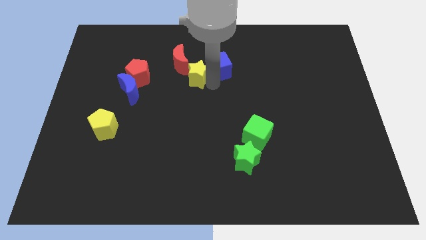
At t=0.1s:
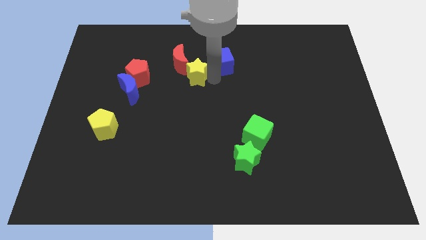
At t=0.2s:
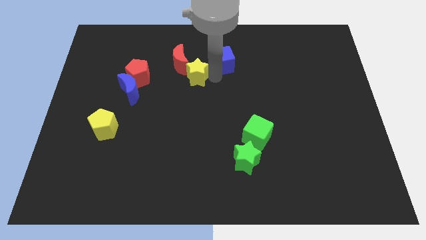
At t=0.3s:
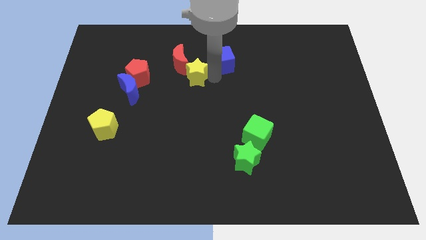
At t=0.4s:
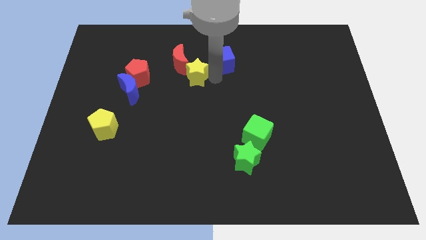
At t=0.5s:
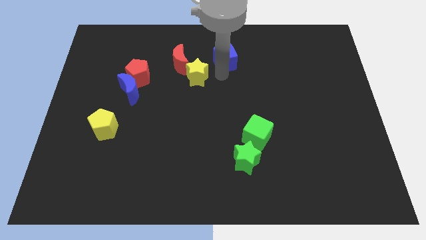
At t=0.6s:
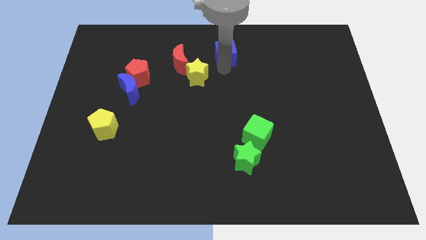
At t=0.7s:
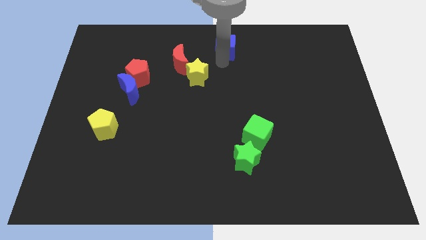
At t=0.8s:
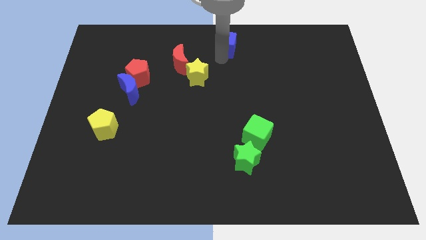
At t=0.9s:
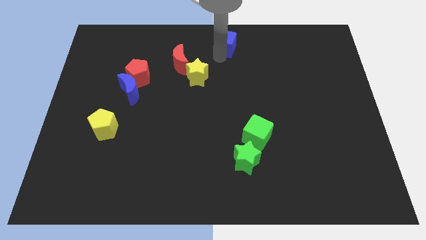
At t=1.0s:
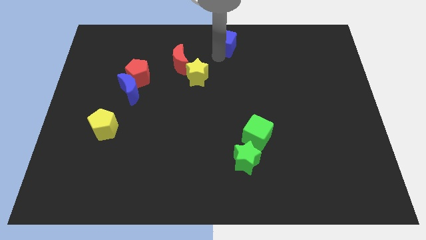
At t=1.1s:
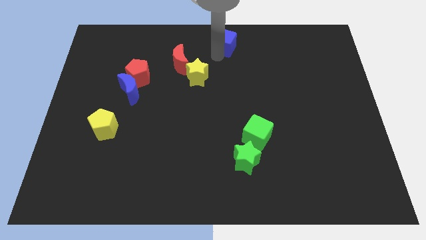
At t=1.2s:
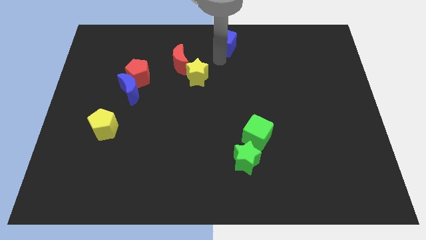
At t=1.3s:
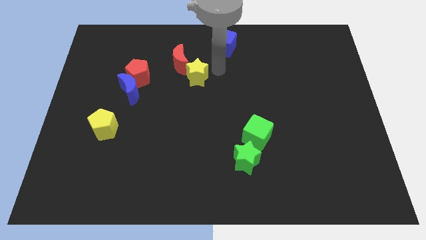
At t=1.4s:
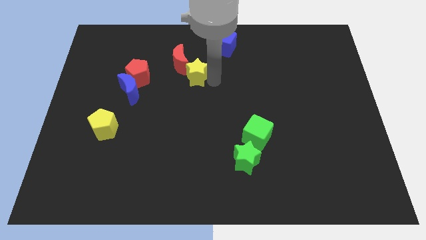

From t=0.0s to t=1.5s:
move the blue cube to the top center of board

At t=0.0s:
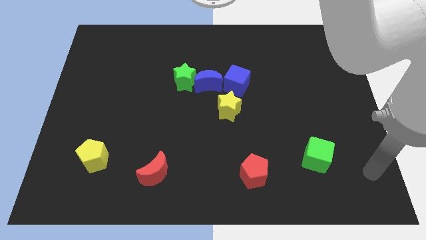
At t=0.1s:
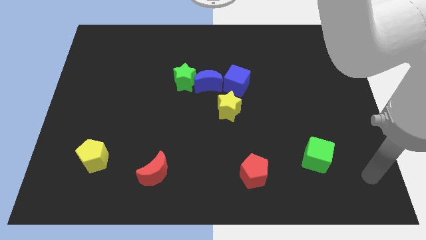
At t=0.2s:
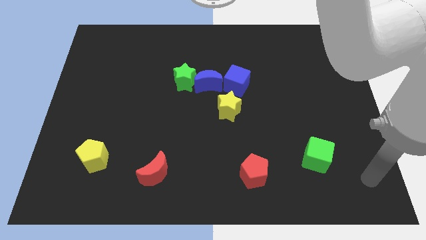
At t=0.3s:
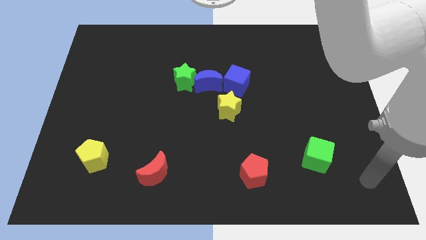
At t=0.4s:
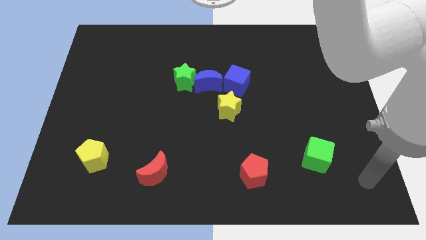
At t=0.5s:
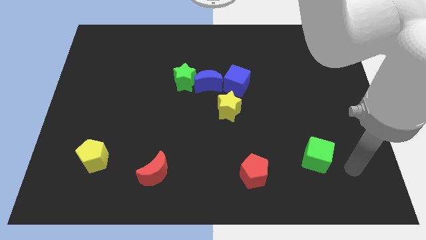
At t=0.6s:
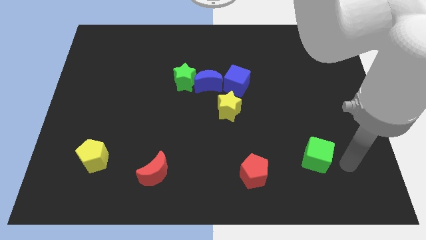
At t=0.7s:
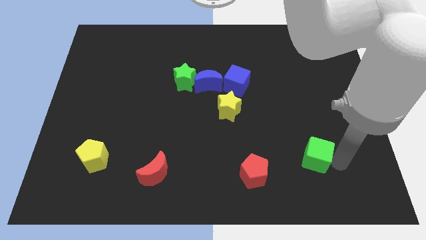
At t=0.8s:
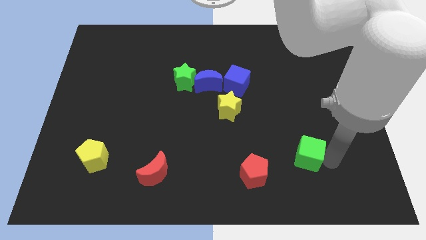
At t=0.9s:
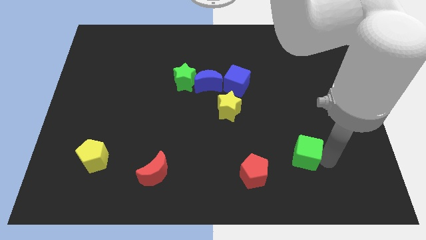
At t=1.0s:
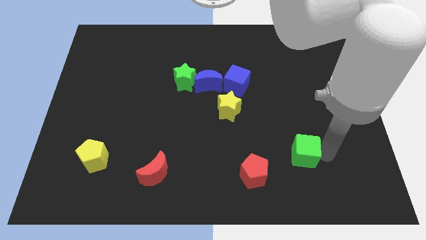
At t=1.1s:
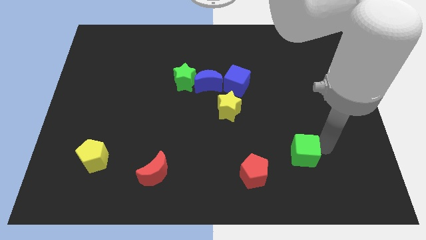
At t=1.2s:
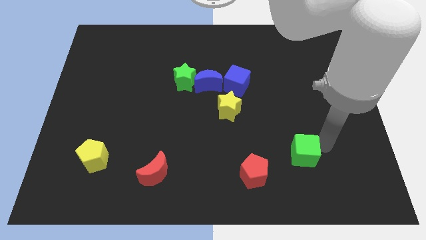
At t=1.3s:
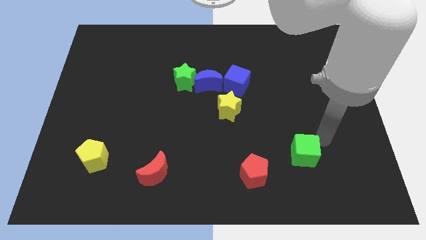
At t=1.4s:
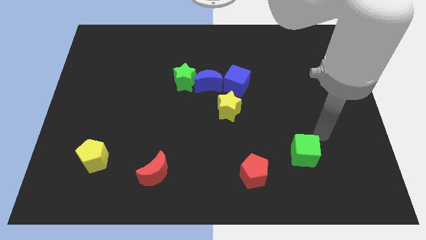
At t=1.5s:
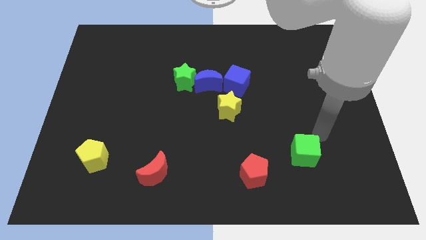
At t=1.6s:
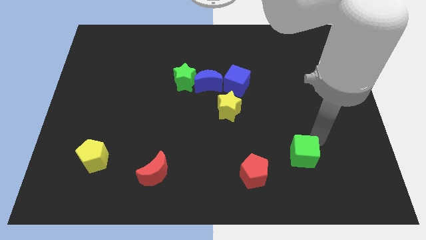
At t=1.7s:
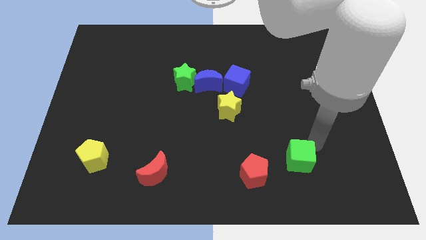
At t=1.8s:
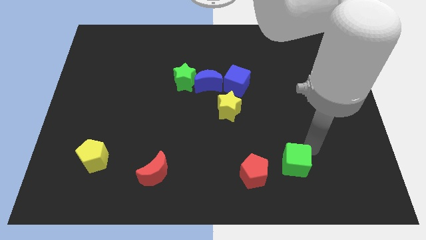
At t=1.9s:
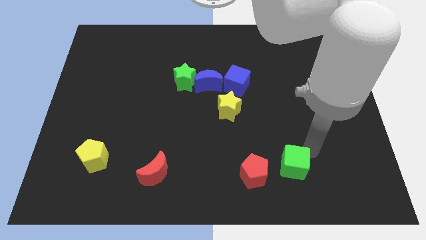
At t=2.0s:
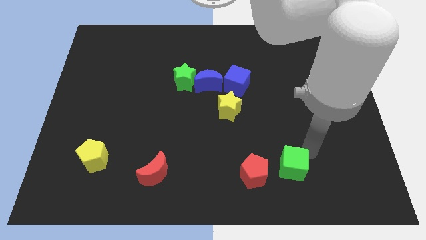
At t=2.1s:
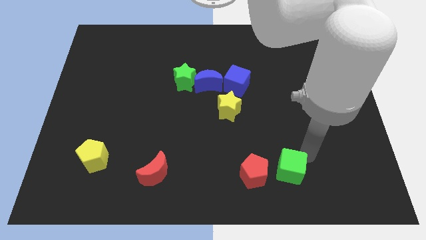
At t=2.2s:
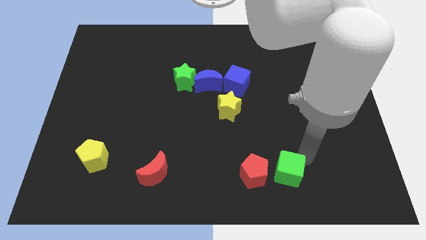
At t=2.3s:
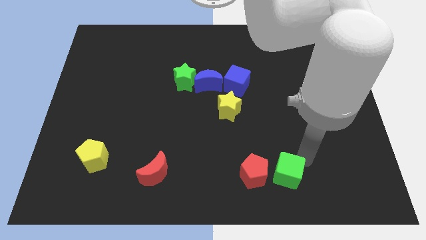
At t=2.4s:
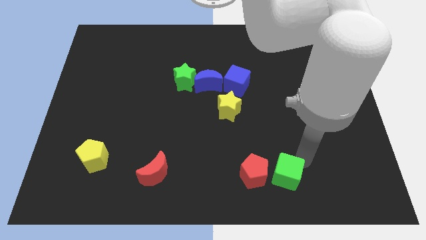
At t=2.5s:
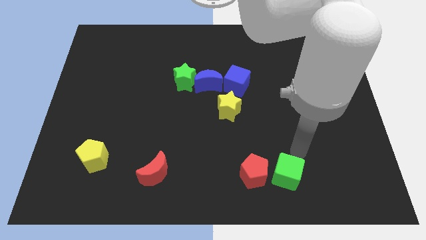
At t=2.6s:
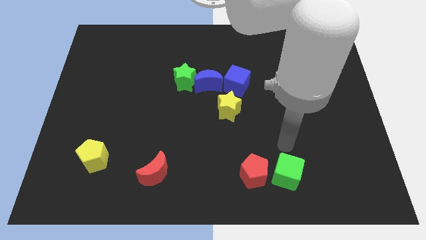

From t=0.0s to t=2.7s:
place green cube beside red pentagon

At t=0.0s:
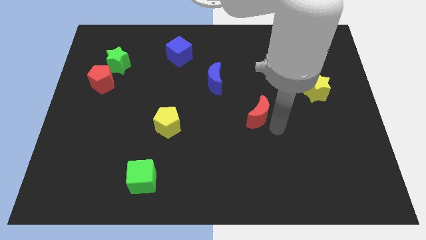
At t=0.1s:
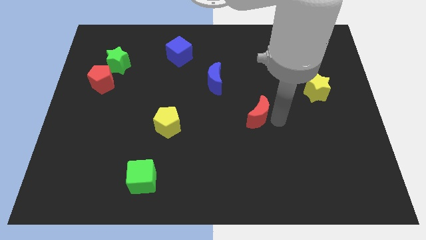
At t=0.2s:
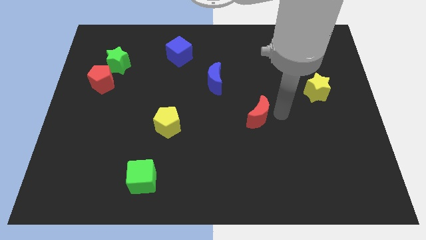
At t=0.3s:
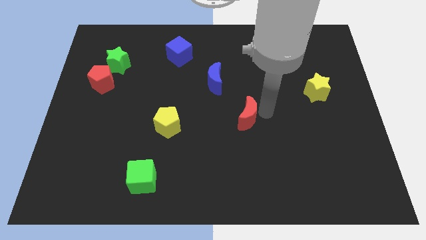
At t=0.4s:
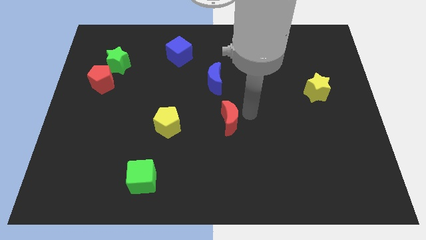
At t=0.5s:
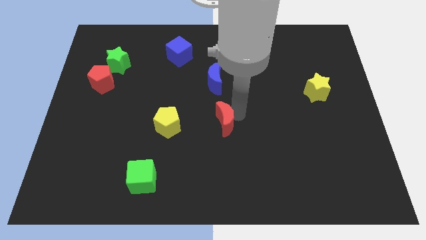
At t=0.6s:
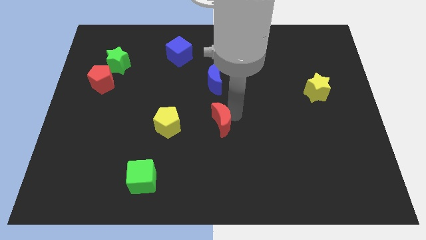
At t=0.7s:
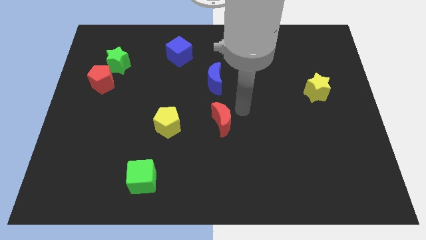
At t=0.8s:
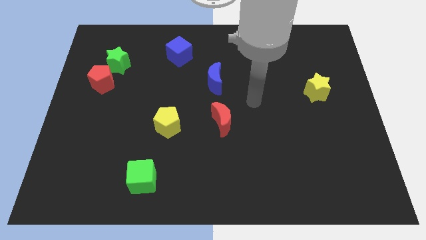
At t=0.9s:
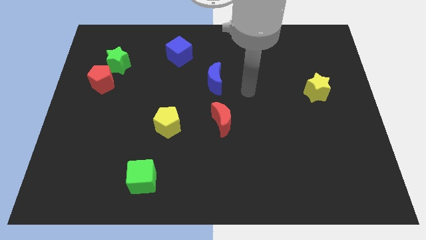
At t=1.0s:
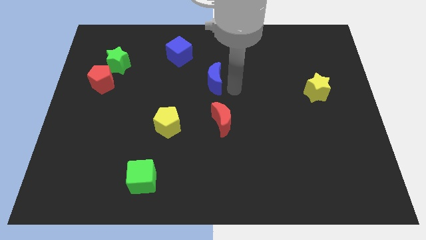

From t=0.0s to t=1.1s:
place the red crescent horizontally towards yellow pentgaon

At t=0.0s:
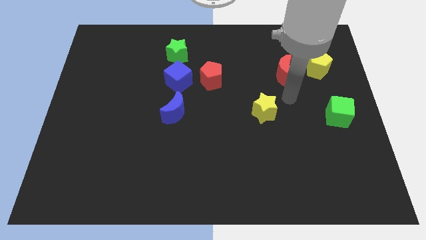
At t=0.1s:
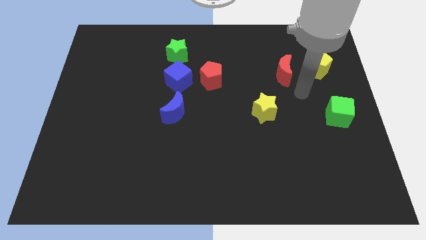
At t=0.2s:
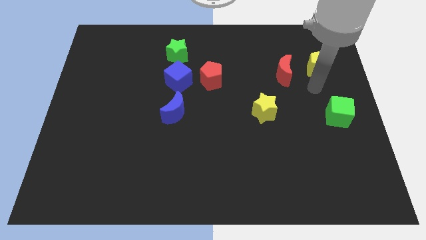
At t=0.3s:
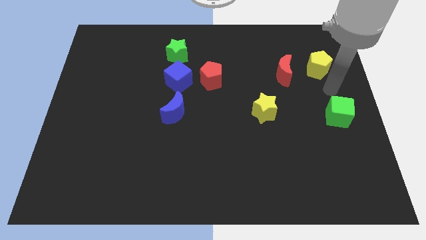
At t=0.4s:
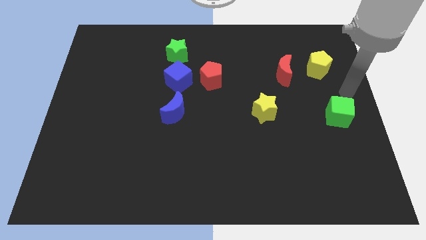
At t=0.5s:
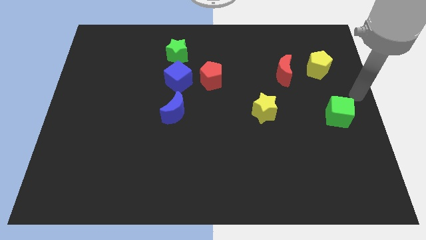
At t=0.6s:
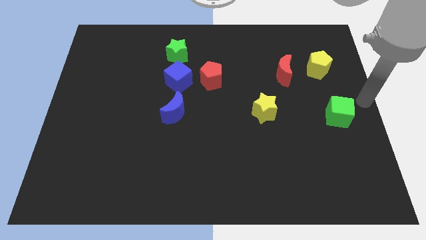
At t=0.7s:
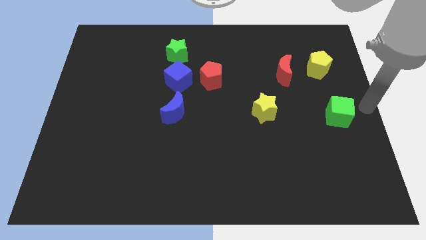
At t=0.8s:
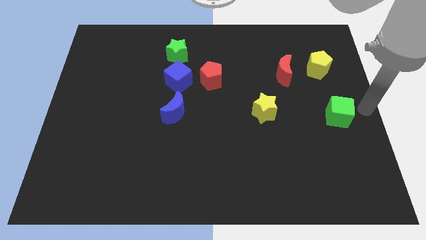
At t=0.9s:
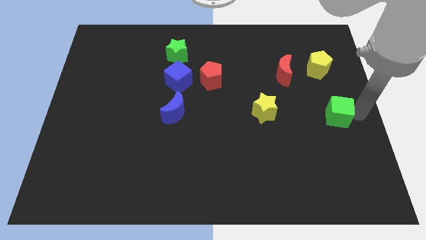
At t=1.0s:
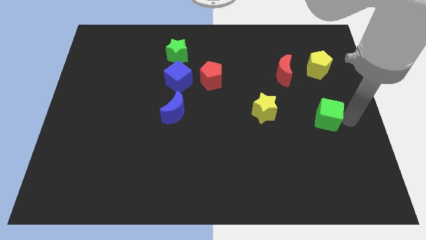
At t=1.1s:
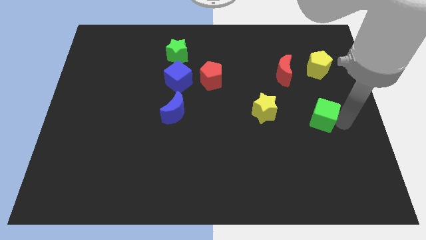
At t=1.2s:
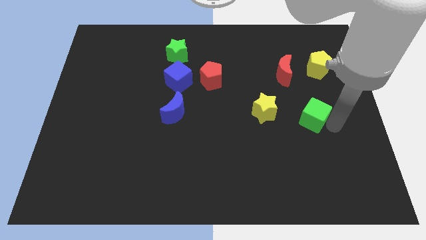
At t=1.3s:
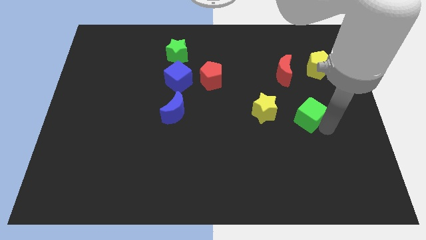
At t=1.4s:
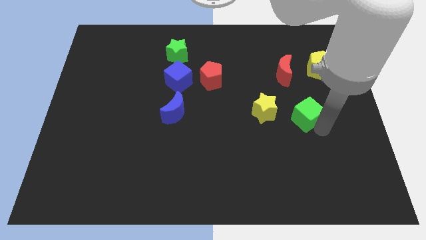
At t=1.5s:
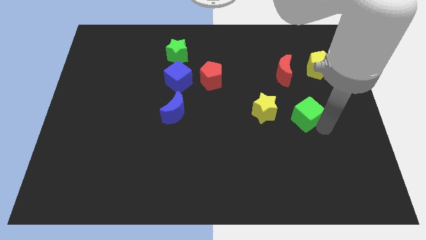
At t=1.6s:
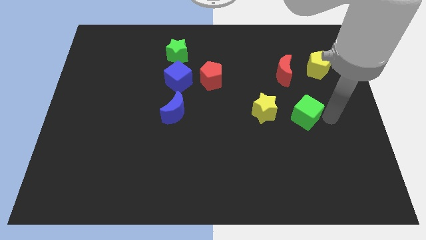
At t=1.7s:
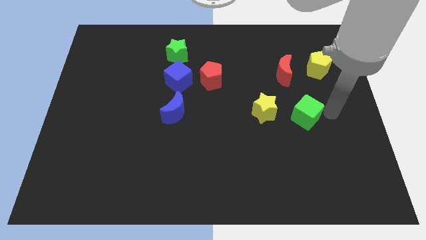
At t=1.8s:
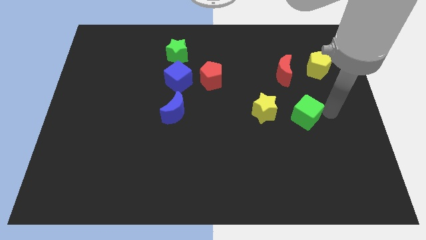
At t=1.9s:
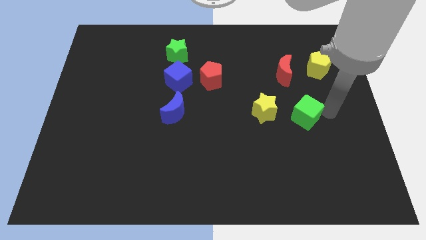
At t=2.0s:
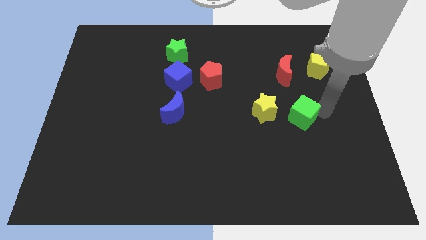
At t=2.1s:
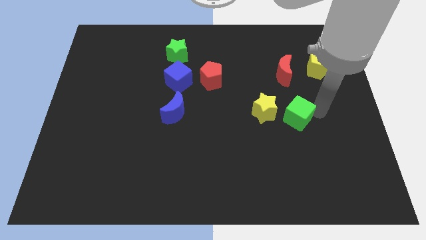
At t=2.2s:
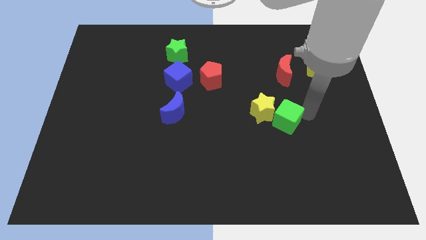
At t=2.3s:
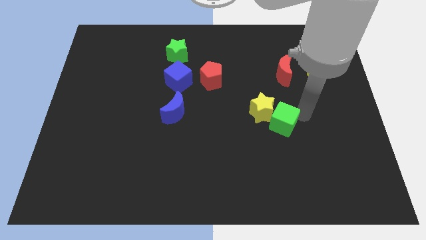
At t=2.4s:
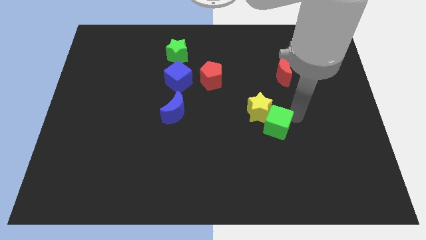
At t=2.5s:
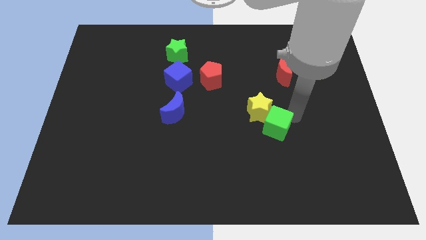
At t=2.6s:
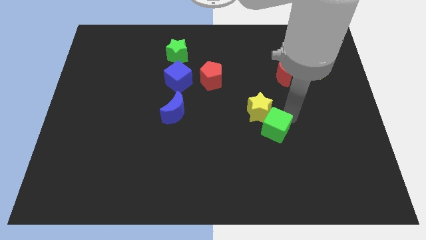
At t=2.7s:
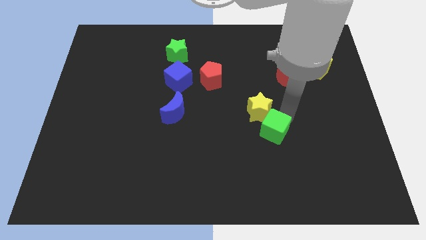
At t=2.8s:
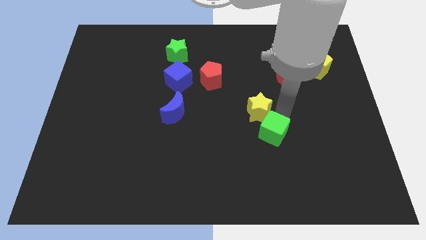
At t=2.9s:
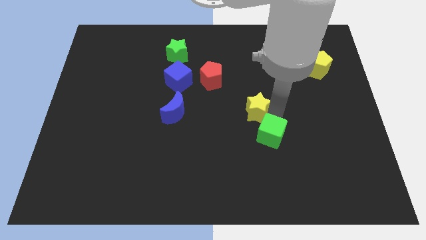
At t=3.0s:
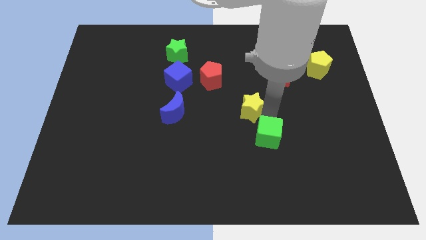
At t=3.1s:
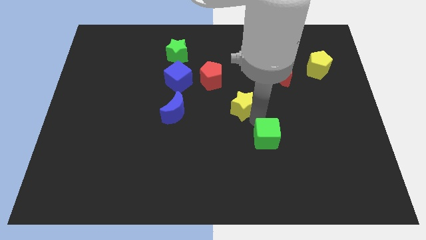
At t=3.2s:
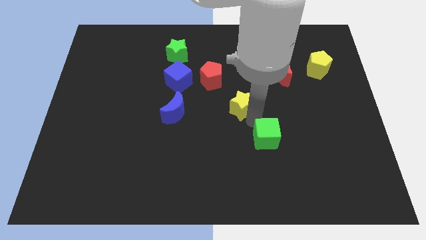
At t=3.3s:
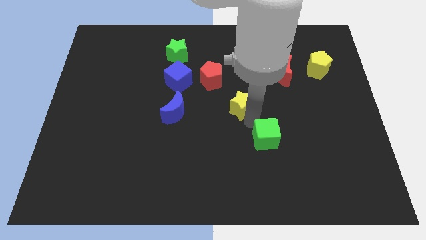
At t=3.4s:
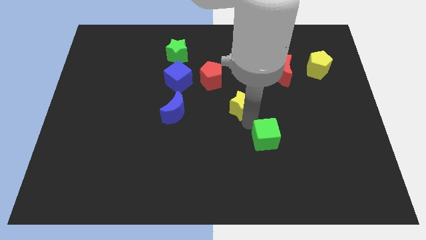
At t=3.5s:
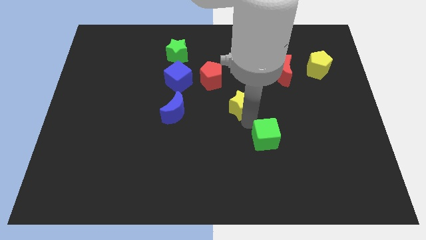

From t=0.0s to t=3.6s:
move the green cube to the bottom right of the yellow star
